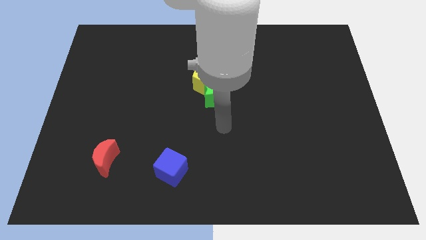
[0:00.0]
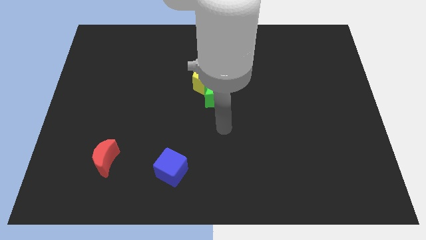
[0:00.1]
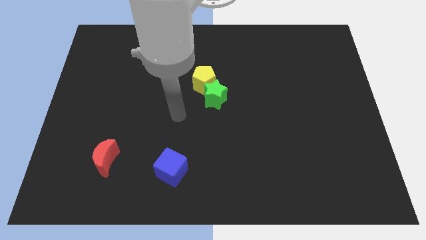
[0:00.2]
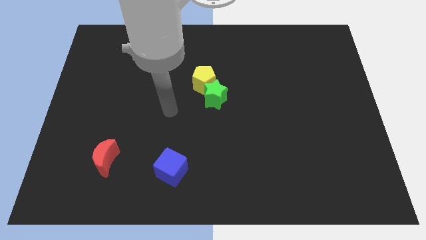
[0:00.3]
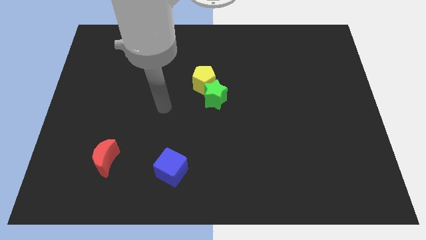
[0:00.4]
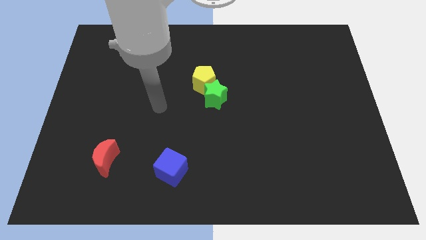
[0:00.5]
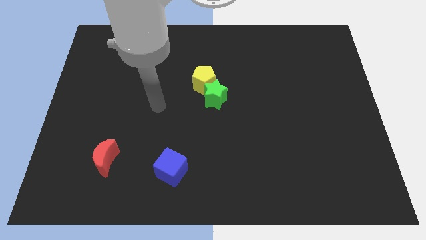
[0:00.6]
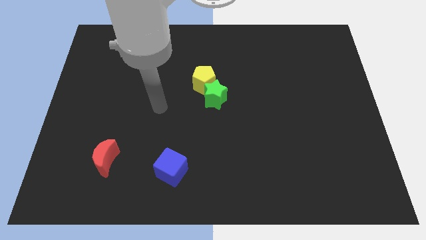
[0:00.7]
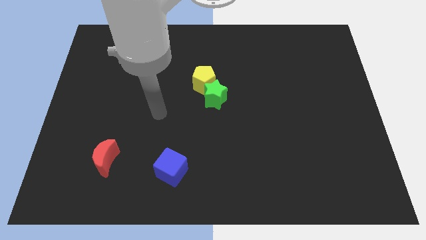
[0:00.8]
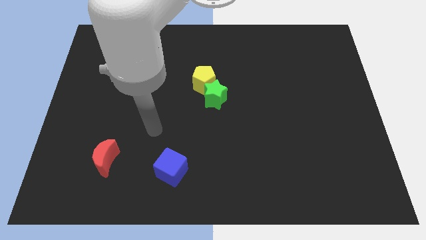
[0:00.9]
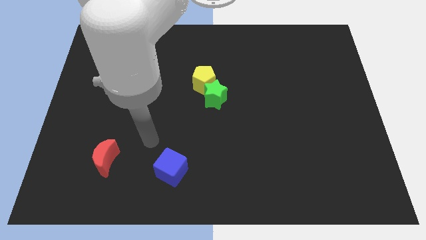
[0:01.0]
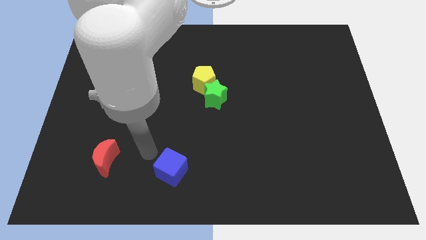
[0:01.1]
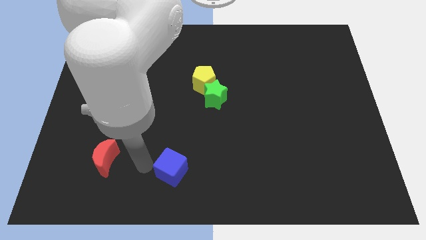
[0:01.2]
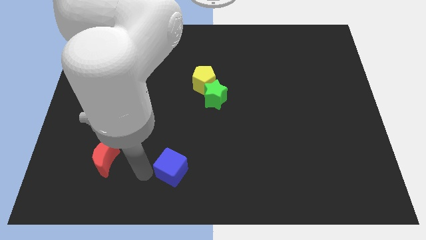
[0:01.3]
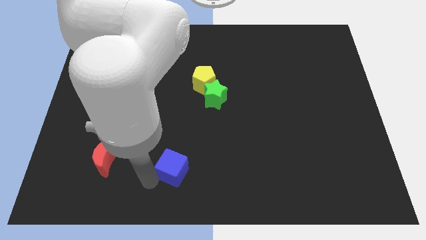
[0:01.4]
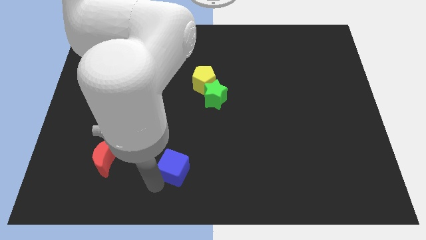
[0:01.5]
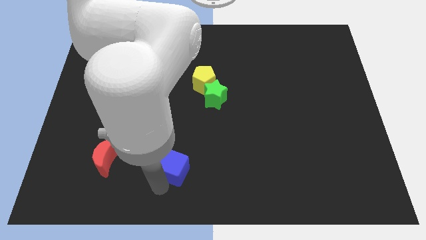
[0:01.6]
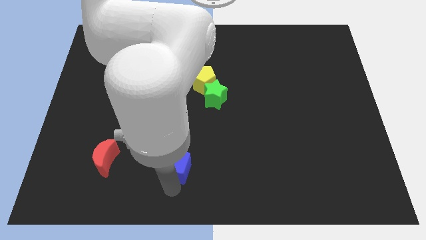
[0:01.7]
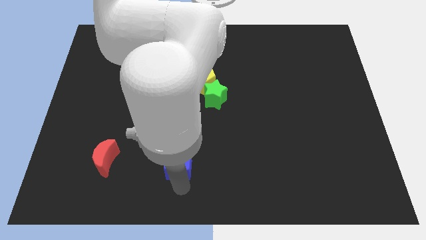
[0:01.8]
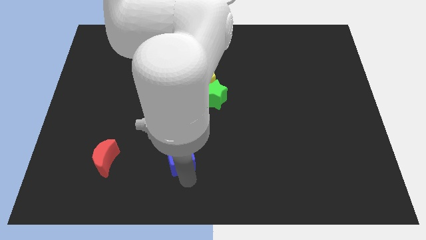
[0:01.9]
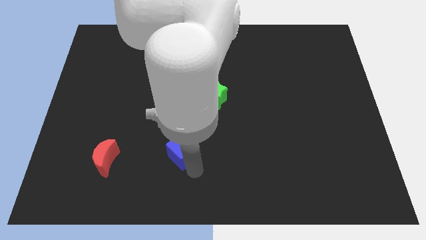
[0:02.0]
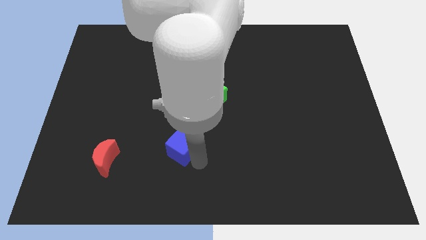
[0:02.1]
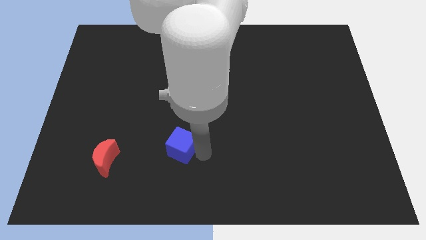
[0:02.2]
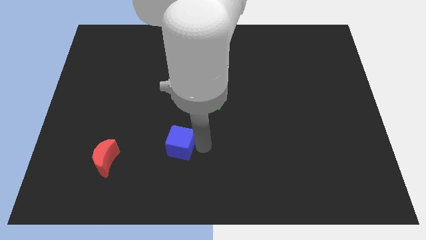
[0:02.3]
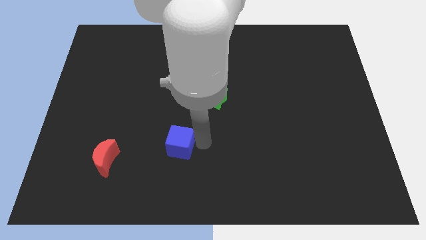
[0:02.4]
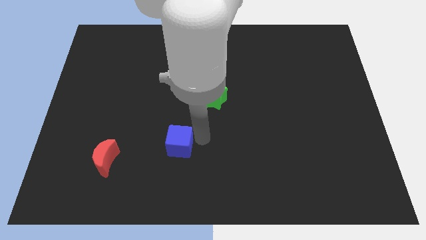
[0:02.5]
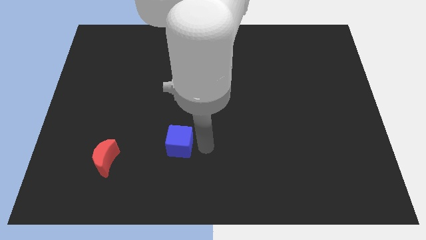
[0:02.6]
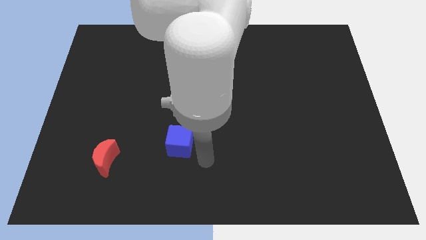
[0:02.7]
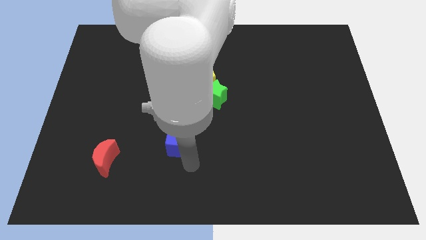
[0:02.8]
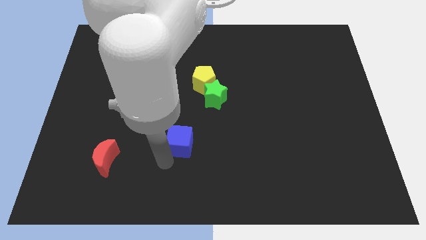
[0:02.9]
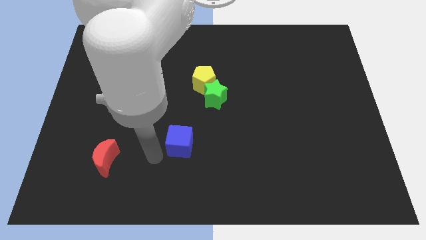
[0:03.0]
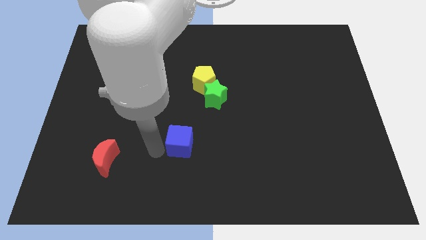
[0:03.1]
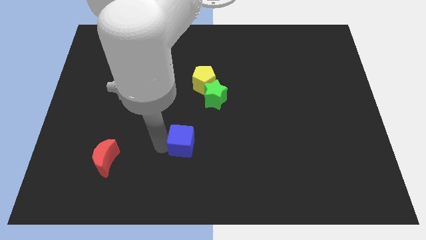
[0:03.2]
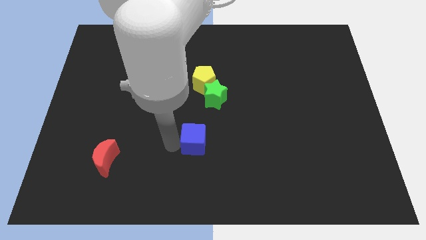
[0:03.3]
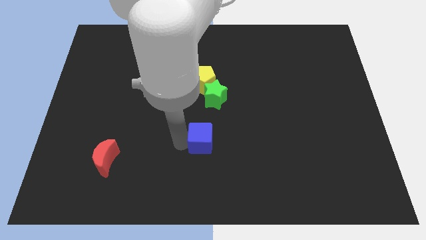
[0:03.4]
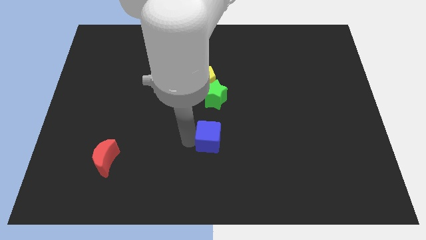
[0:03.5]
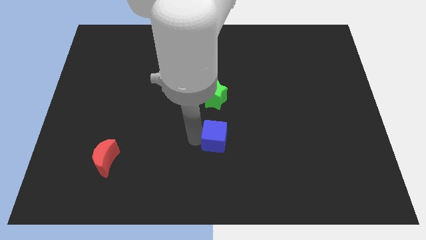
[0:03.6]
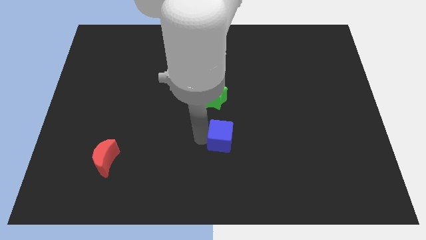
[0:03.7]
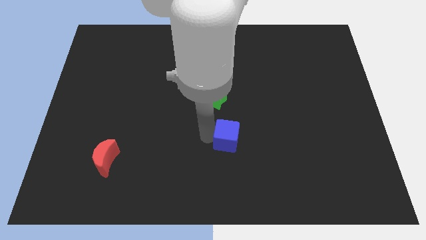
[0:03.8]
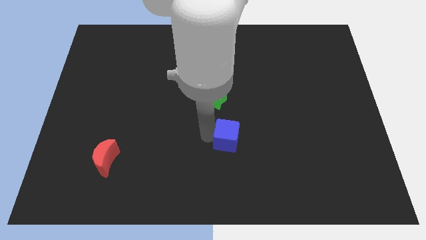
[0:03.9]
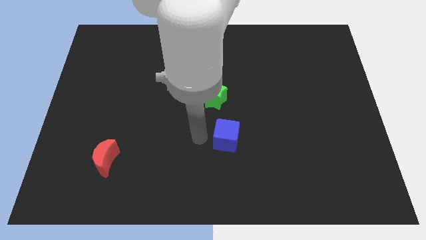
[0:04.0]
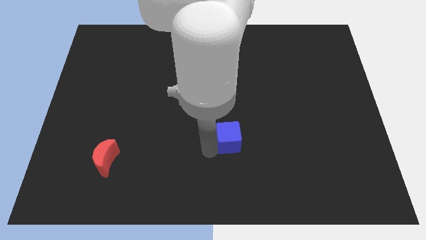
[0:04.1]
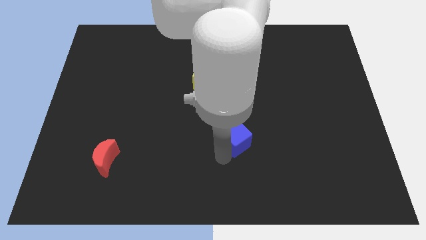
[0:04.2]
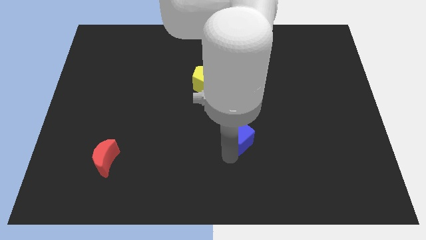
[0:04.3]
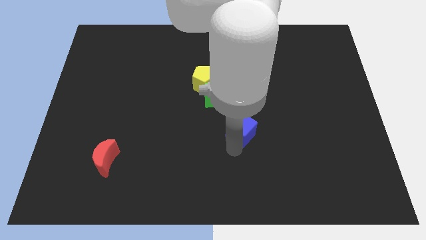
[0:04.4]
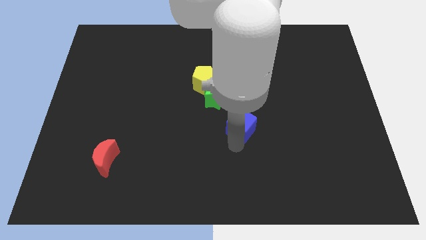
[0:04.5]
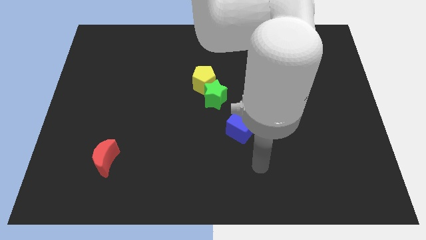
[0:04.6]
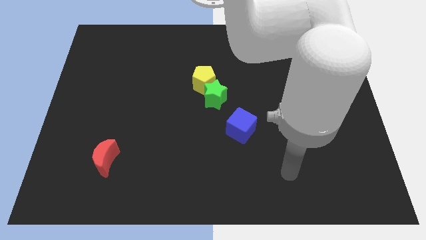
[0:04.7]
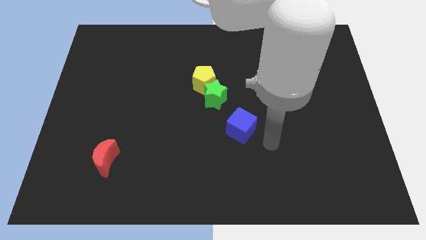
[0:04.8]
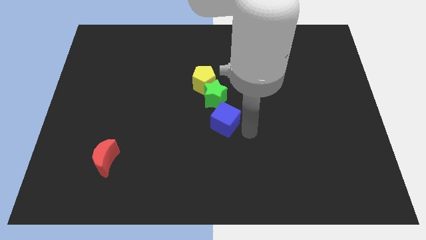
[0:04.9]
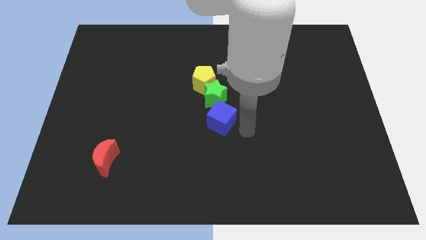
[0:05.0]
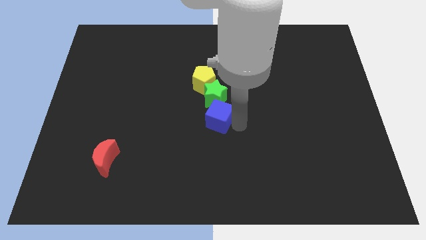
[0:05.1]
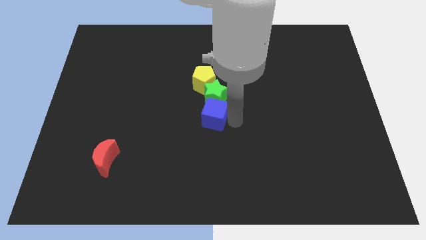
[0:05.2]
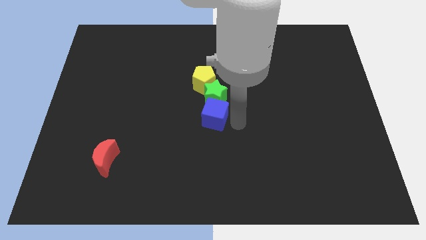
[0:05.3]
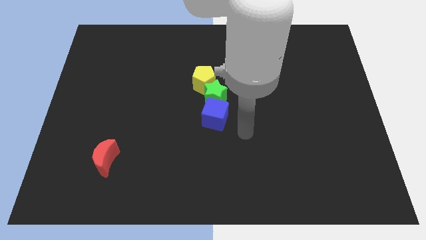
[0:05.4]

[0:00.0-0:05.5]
move the cube next to the green star

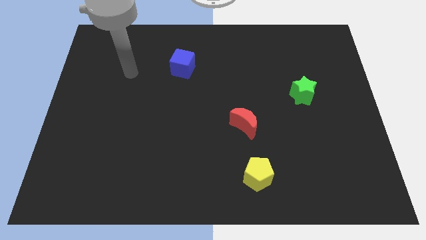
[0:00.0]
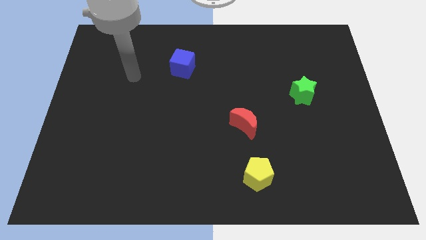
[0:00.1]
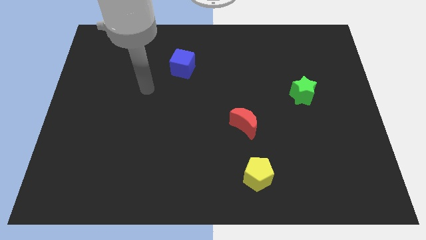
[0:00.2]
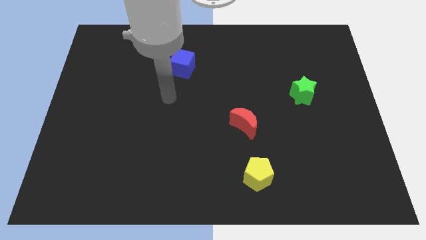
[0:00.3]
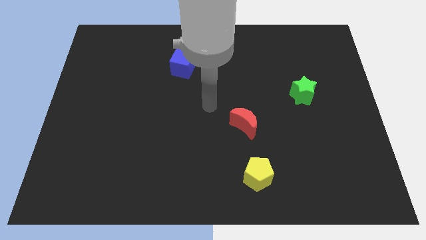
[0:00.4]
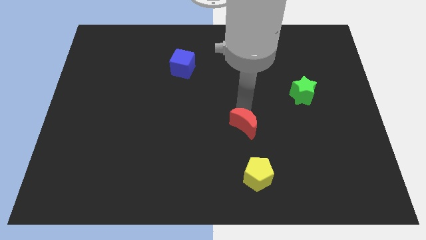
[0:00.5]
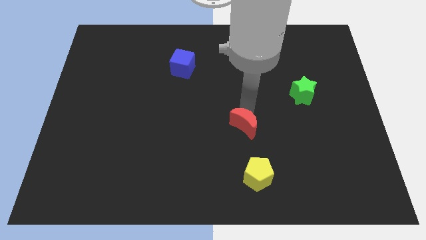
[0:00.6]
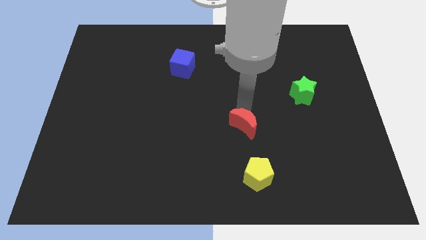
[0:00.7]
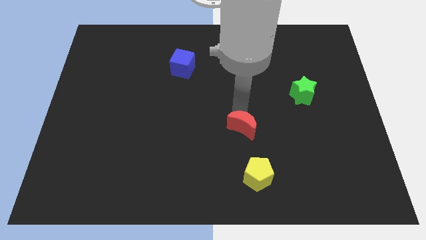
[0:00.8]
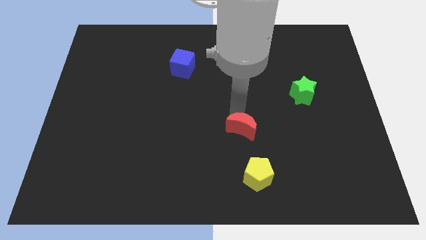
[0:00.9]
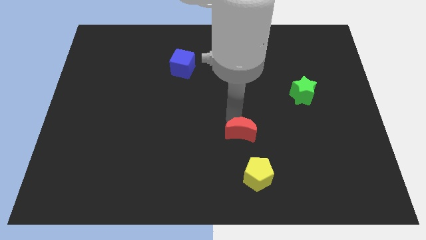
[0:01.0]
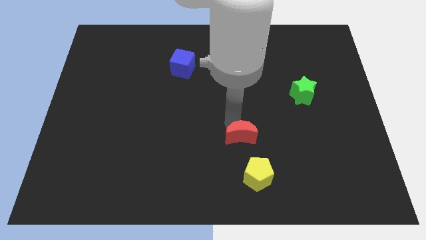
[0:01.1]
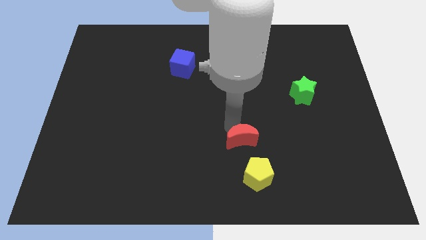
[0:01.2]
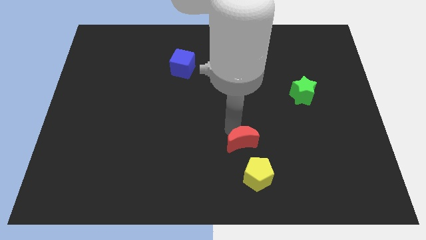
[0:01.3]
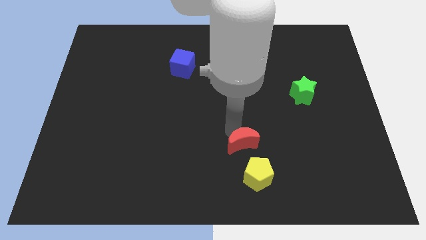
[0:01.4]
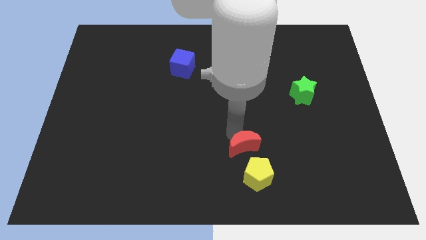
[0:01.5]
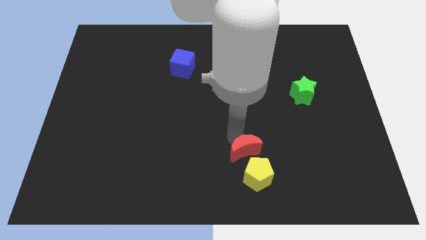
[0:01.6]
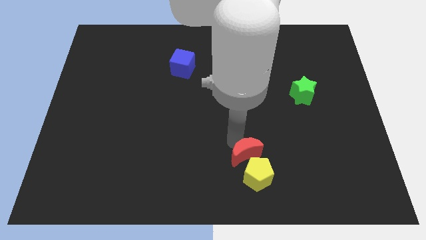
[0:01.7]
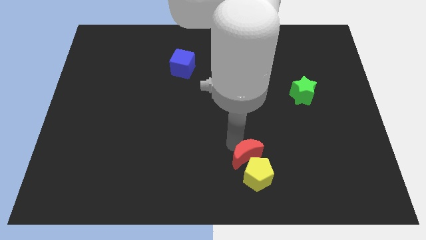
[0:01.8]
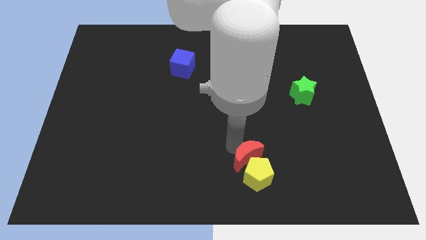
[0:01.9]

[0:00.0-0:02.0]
push the red block to the yellow block

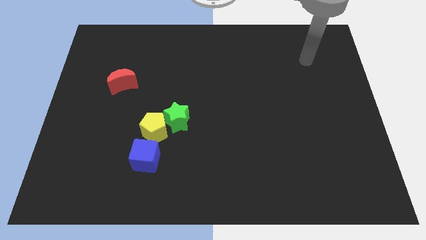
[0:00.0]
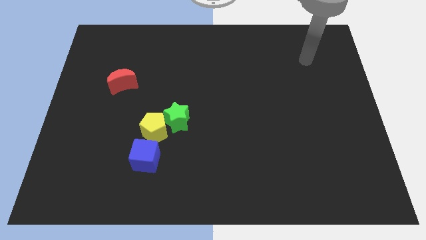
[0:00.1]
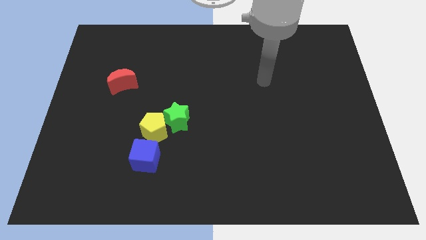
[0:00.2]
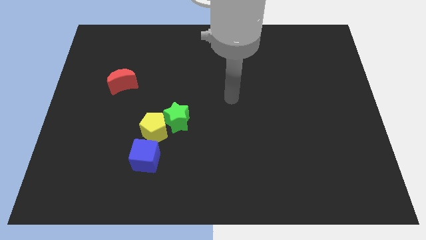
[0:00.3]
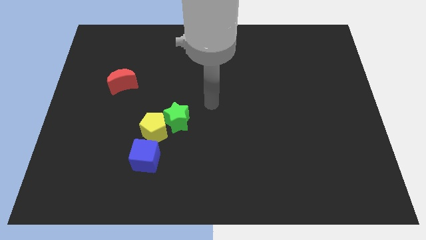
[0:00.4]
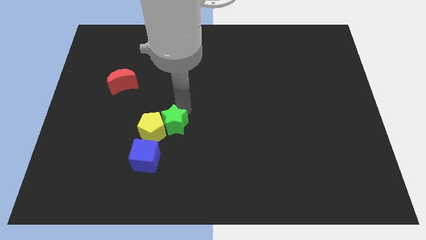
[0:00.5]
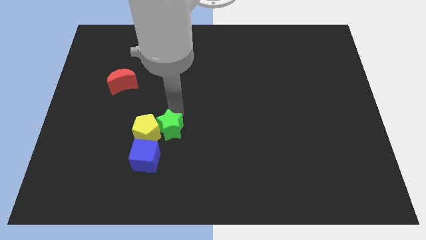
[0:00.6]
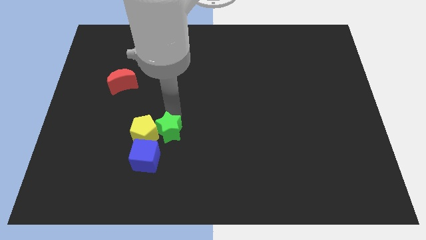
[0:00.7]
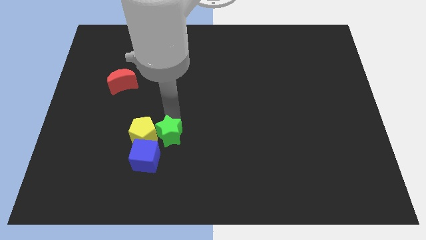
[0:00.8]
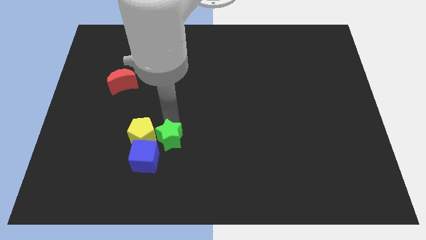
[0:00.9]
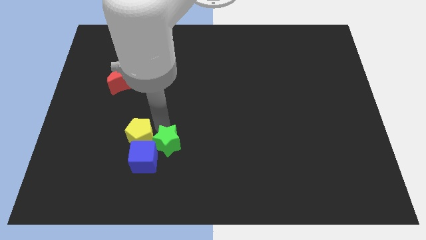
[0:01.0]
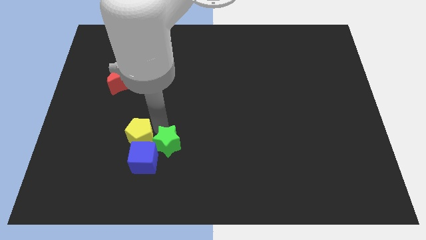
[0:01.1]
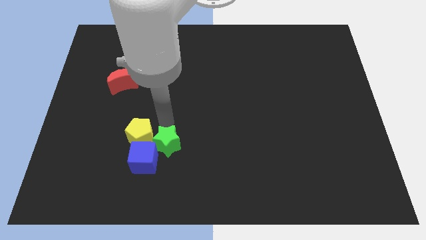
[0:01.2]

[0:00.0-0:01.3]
put the green star close to the cube
